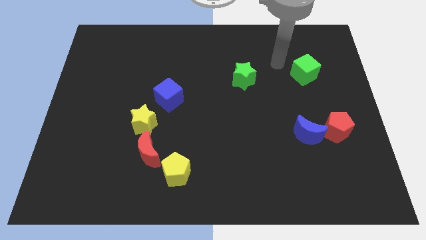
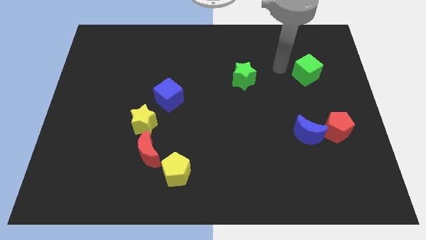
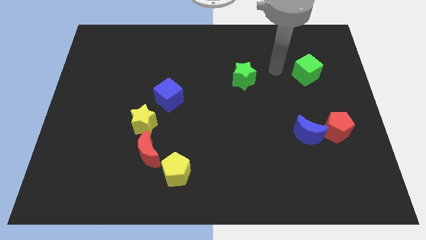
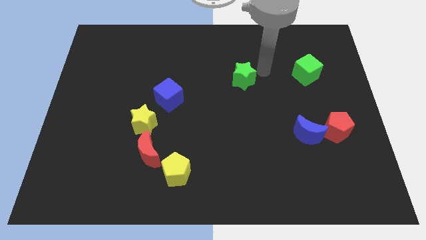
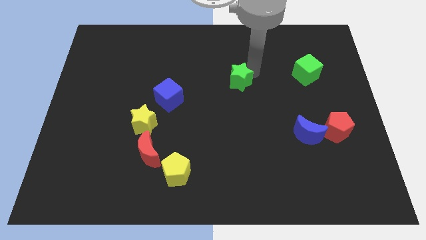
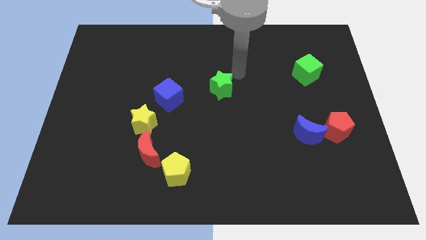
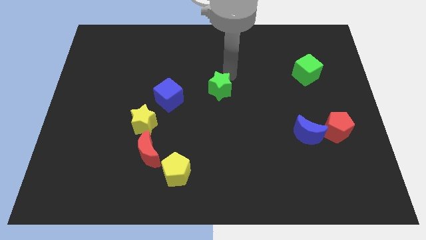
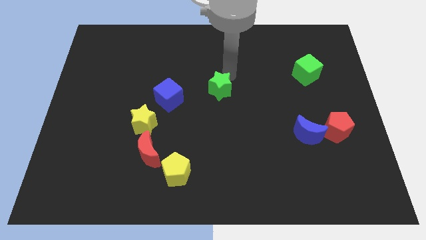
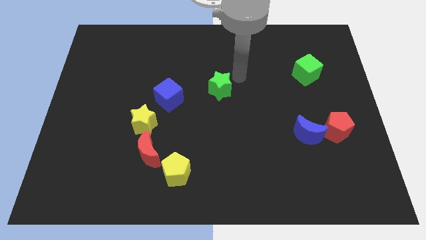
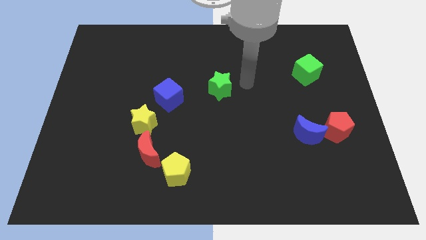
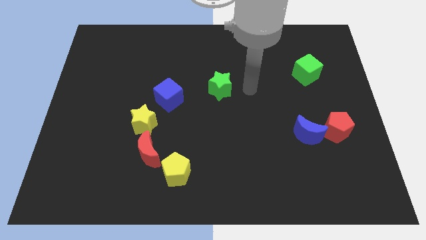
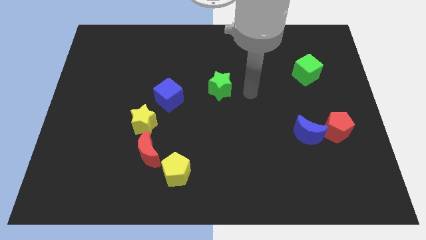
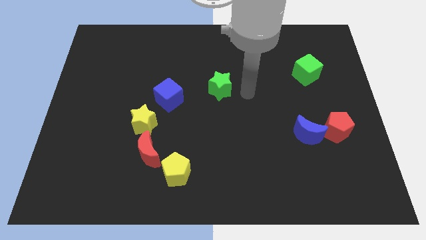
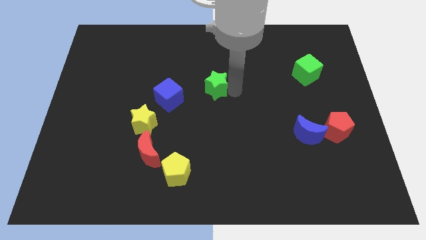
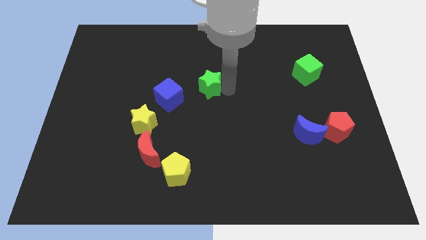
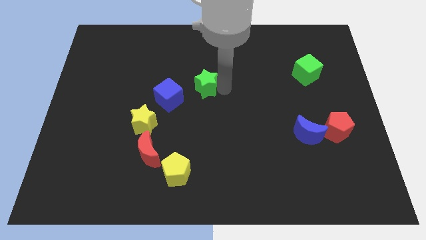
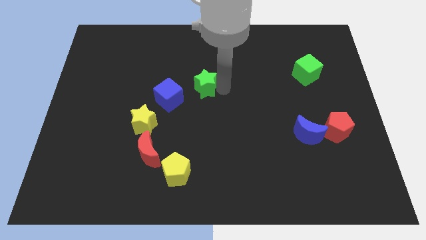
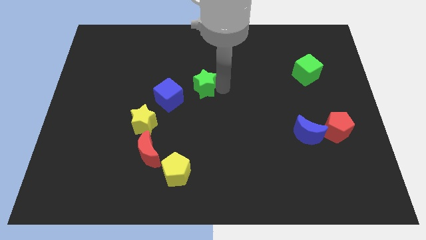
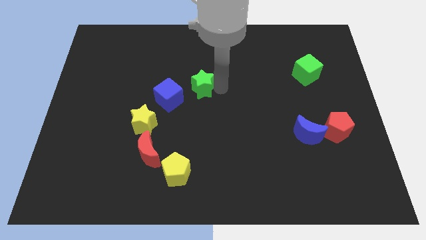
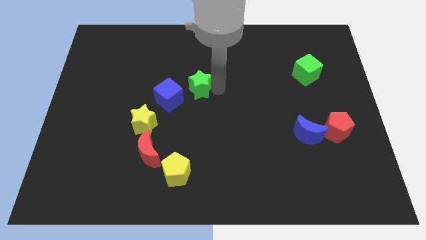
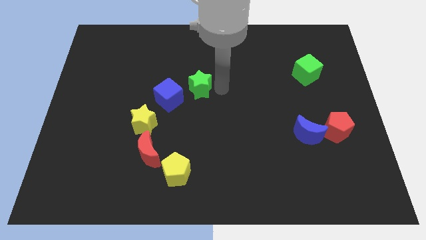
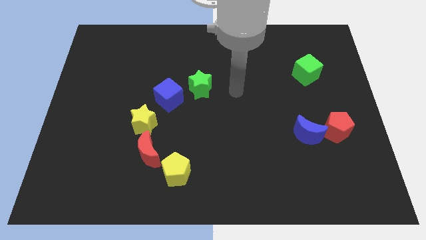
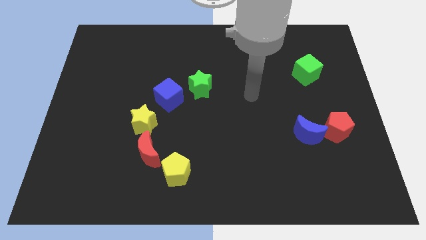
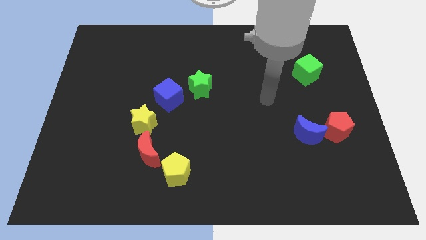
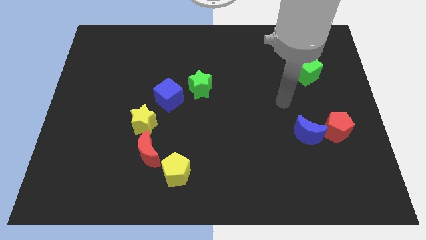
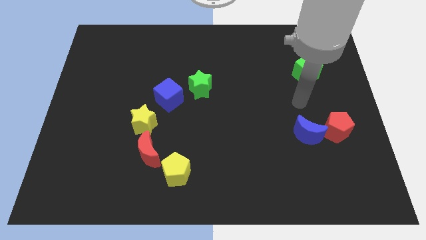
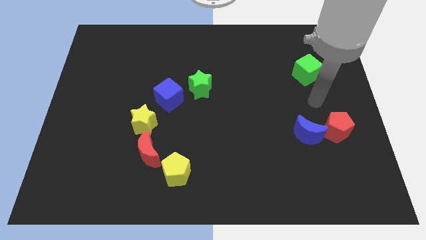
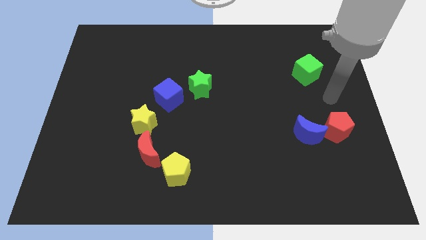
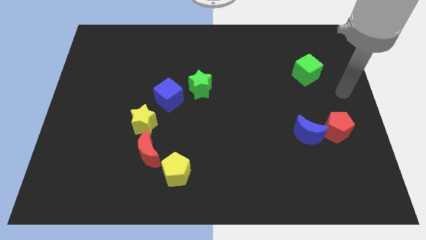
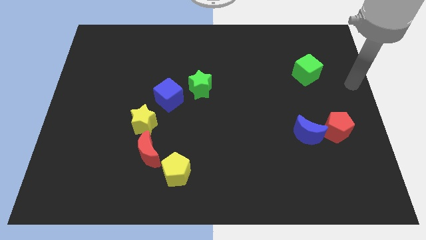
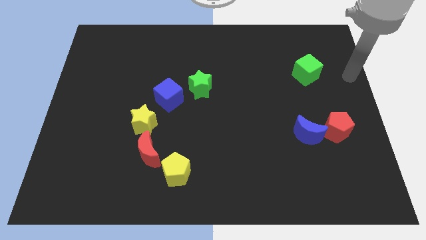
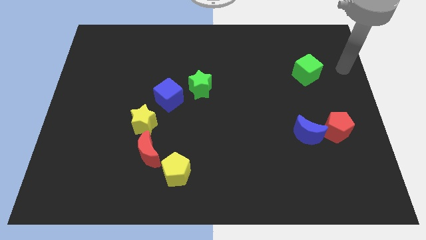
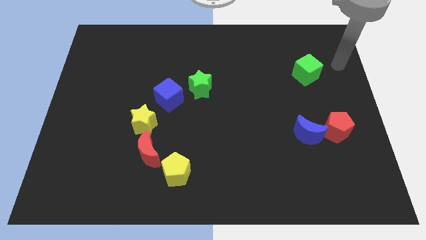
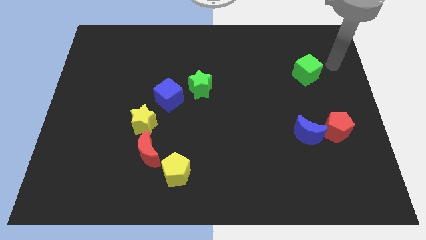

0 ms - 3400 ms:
push the green cube left to the board

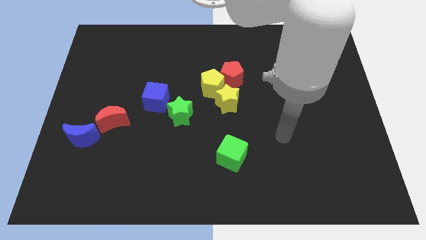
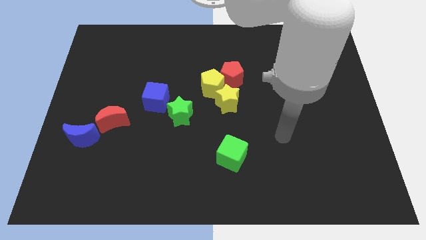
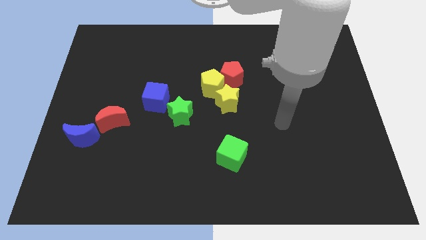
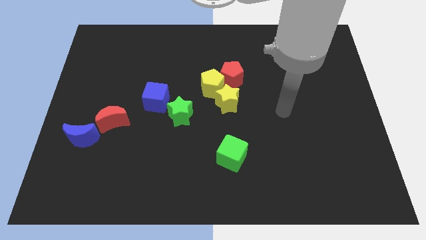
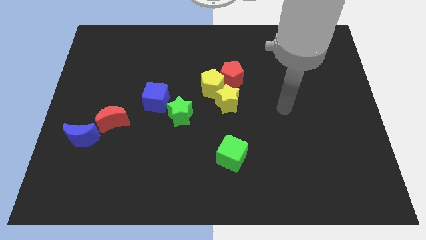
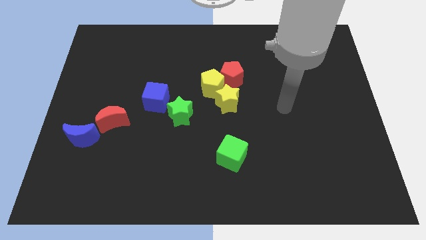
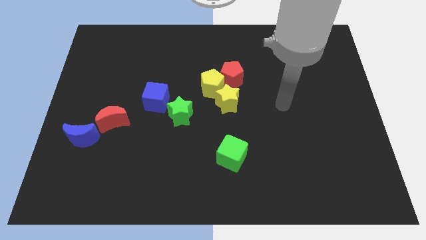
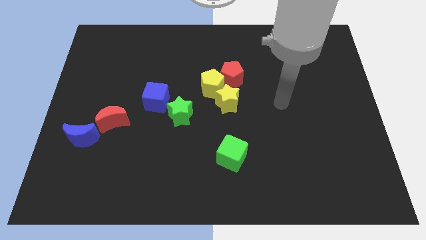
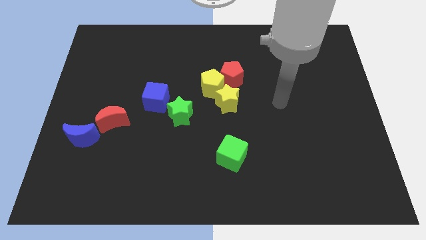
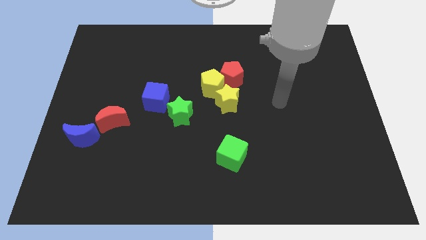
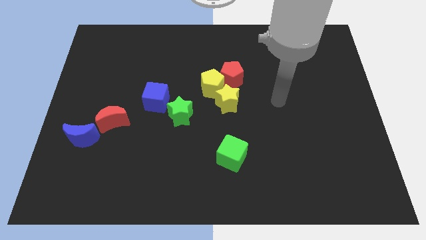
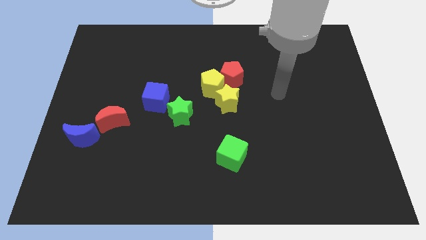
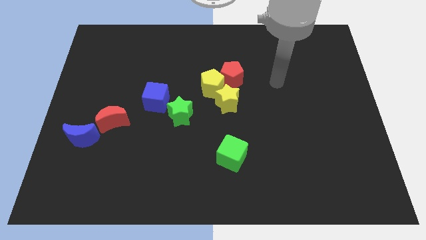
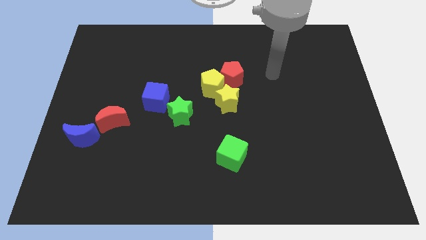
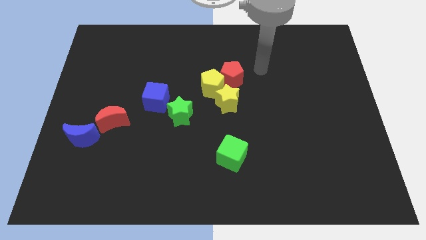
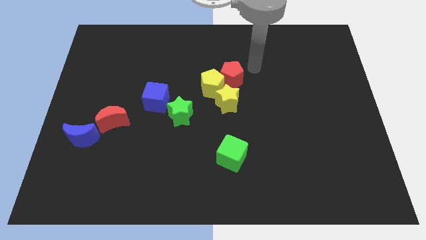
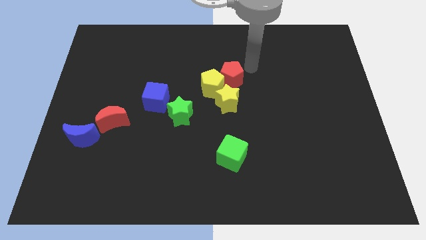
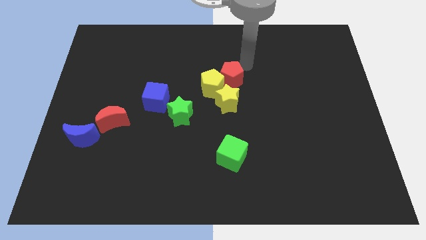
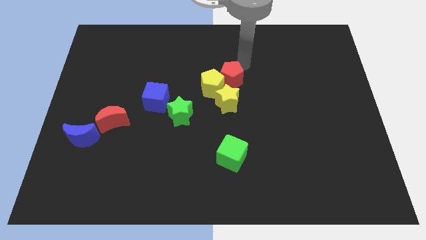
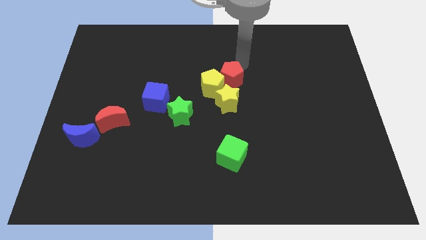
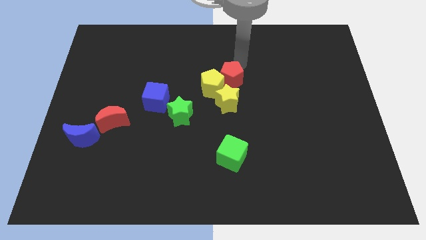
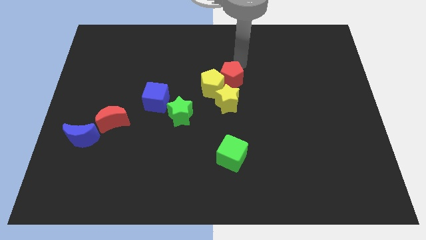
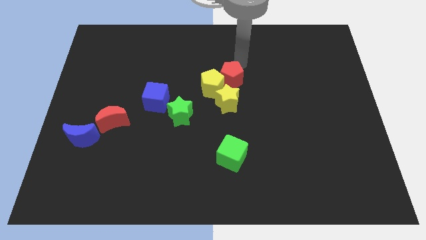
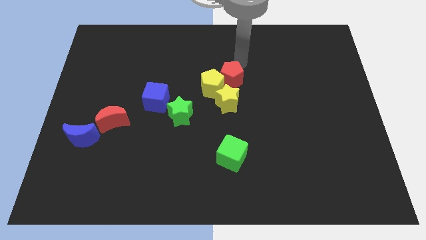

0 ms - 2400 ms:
move arm near red pentagon

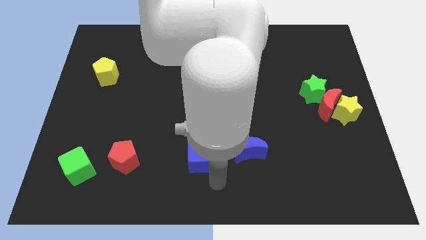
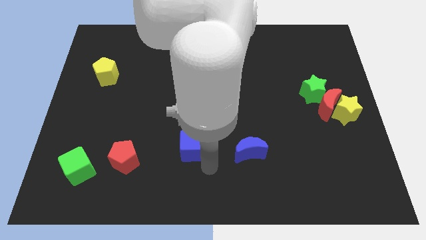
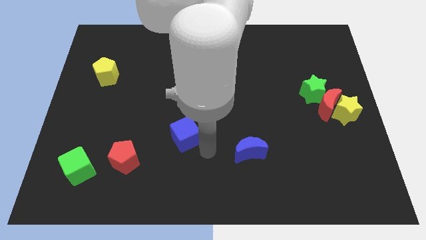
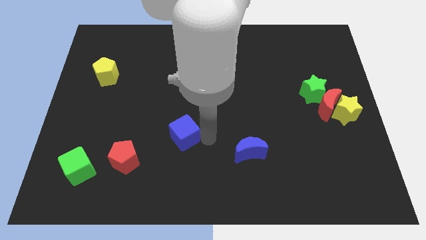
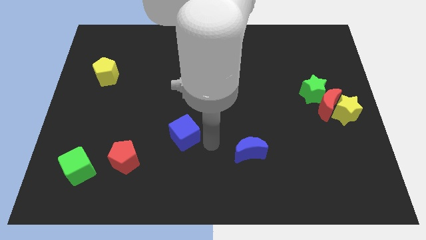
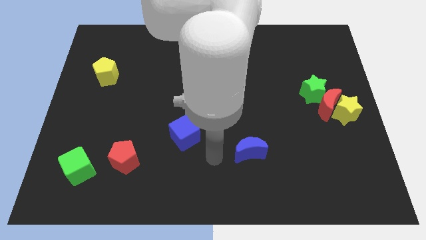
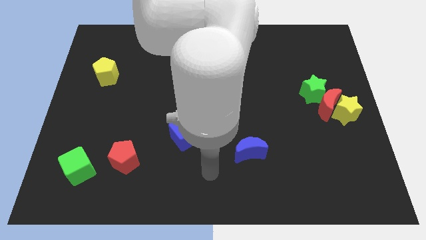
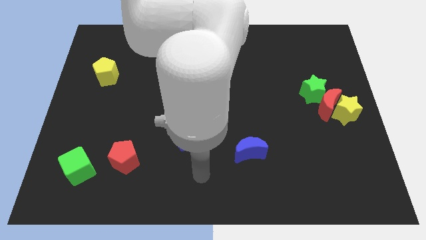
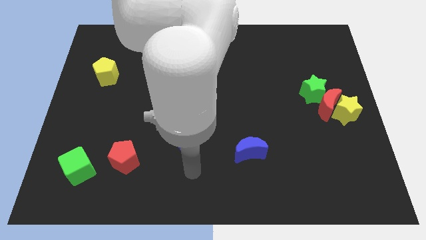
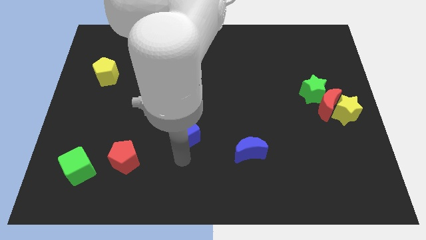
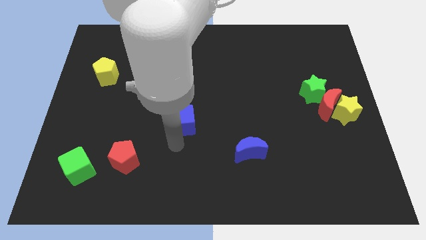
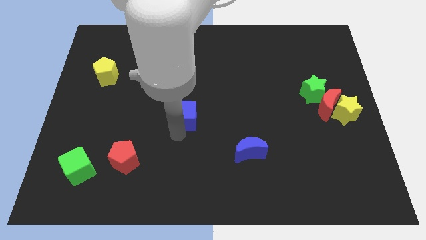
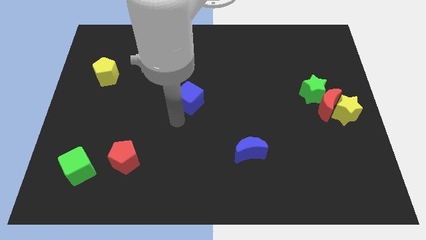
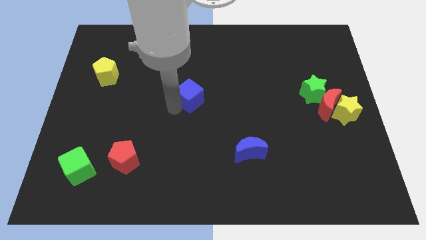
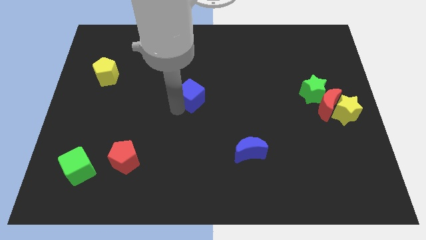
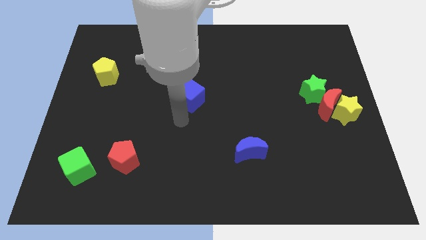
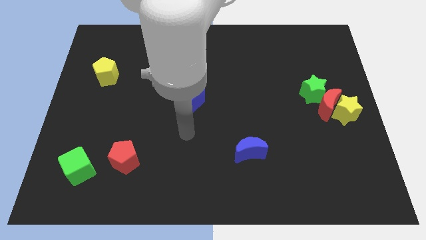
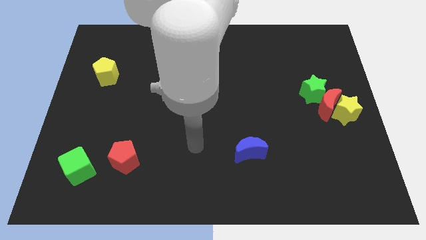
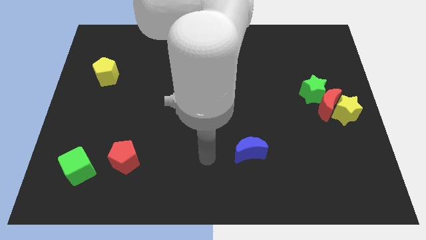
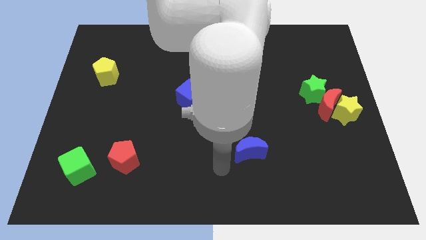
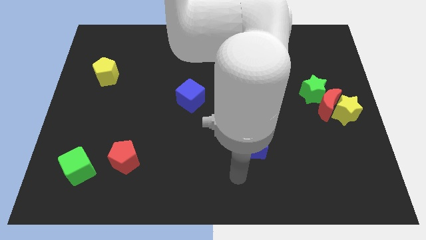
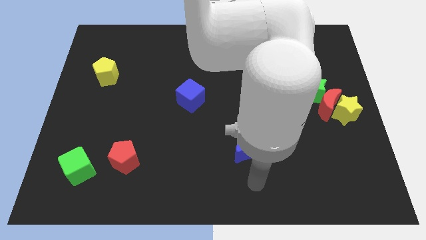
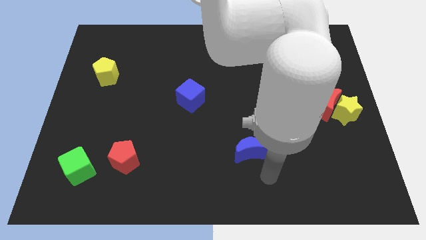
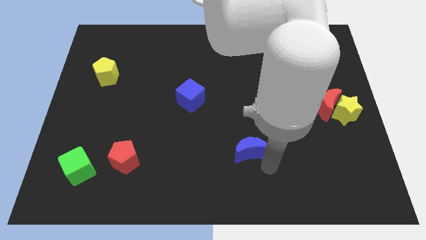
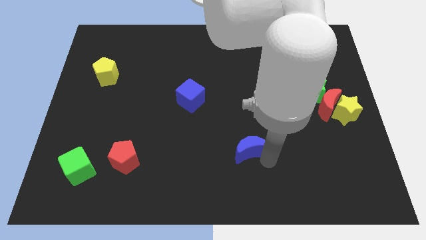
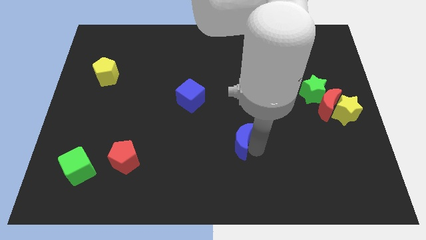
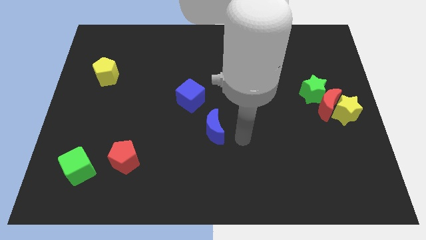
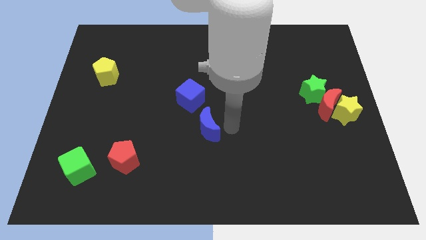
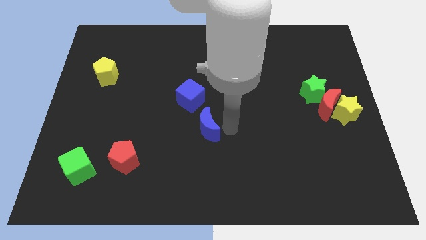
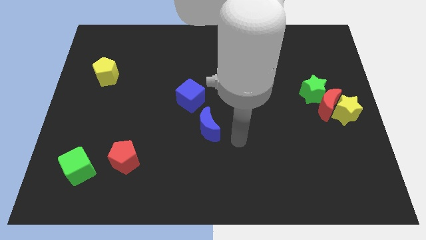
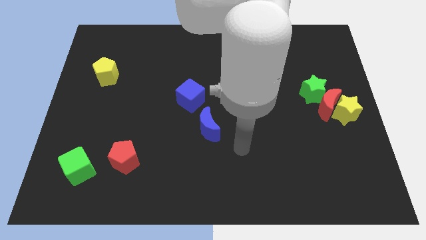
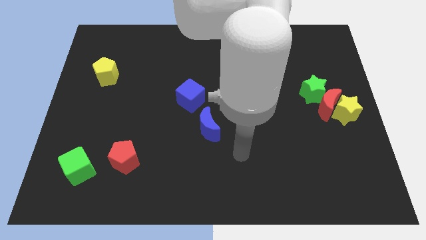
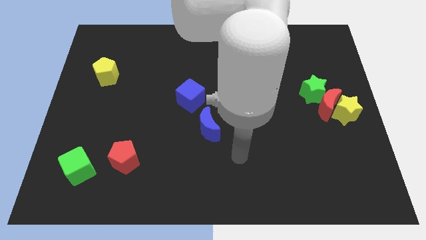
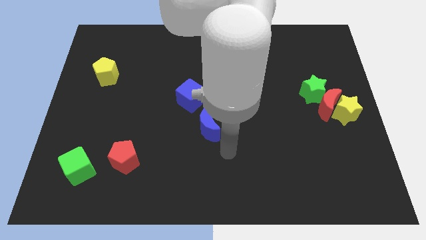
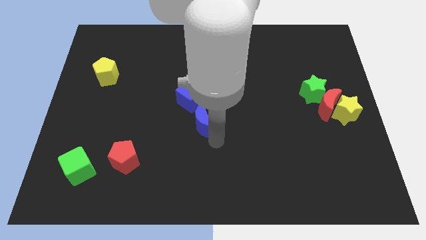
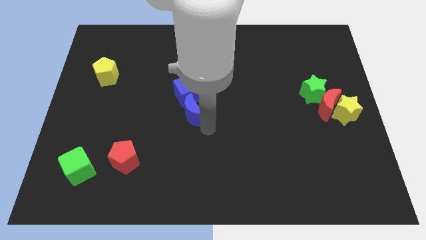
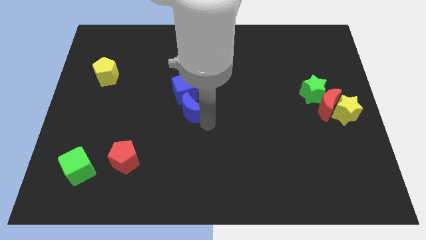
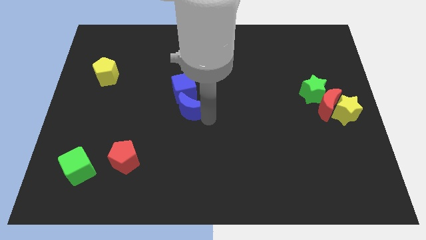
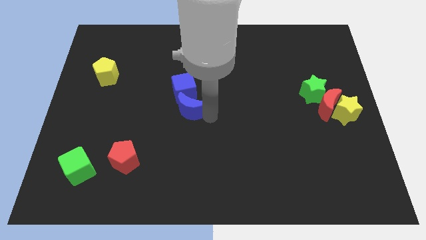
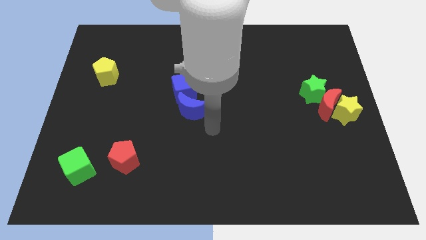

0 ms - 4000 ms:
push the blue blocks to the left side of the group of blocks
